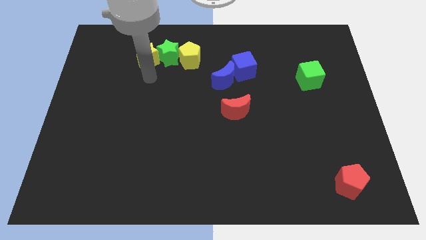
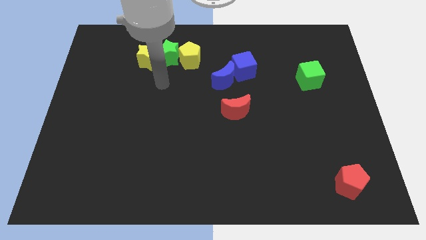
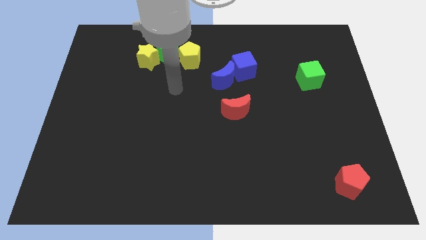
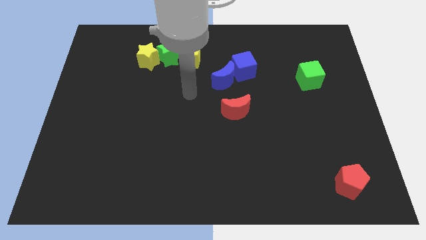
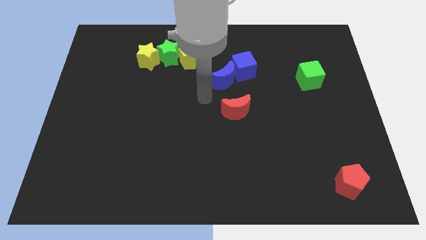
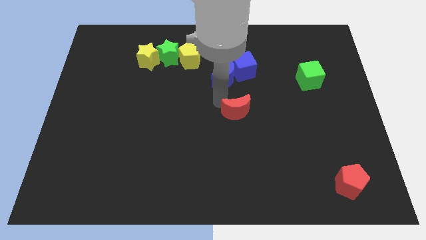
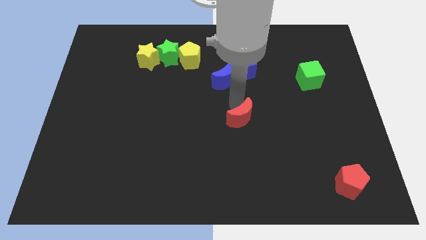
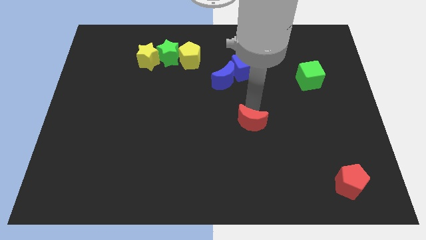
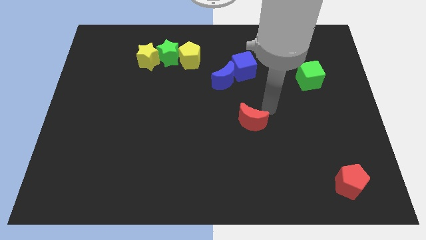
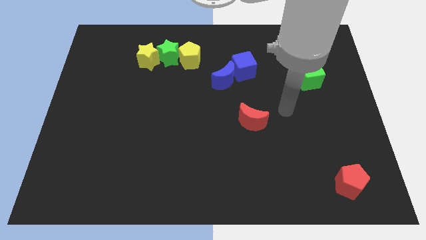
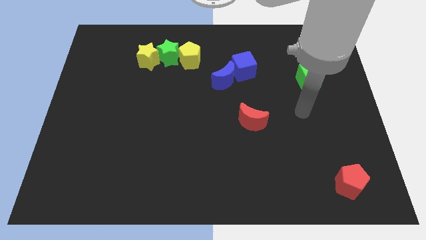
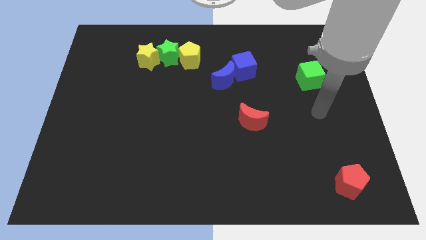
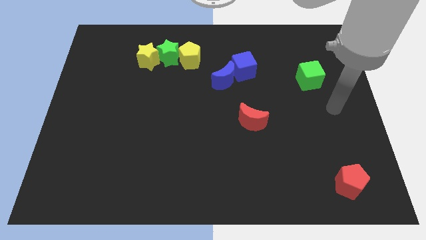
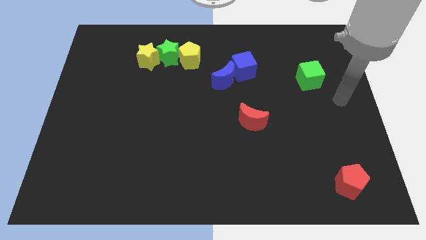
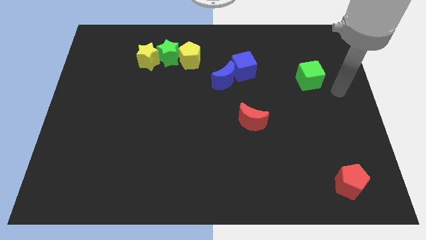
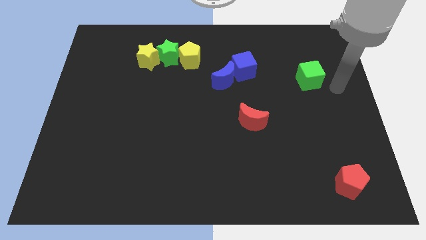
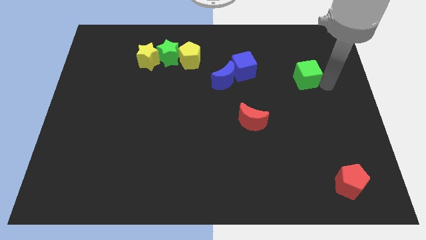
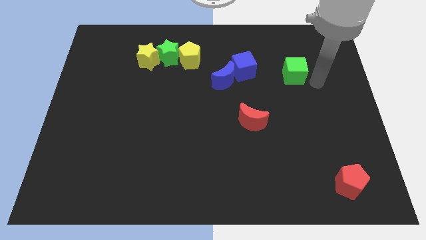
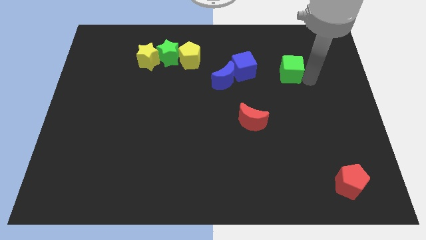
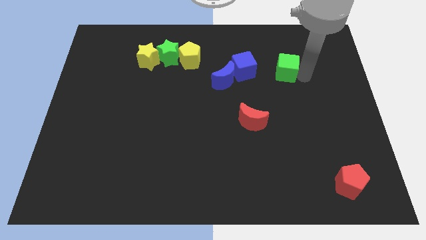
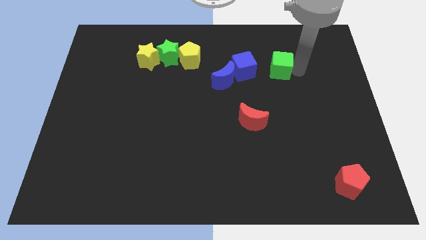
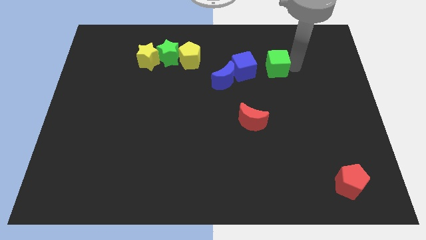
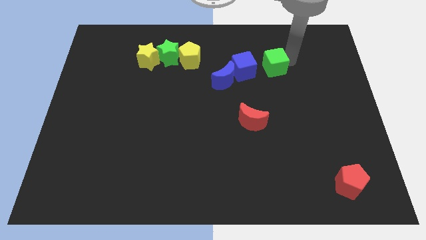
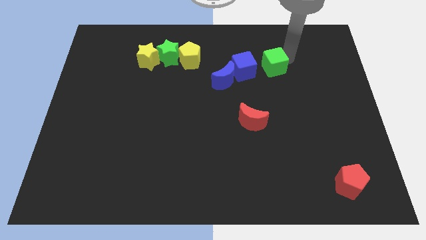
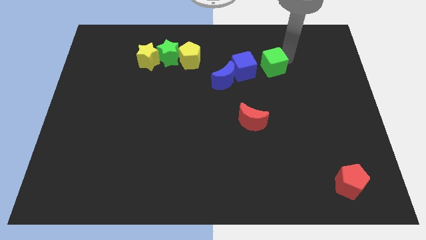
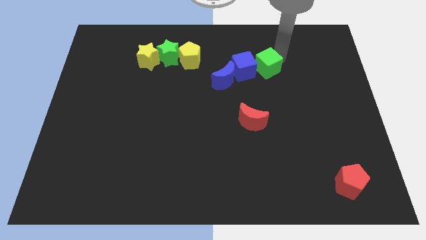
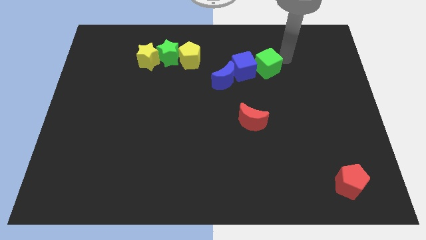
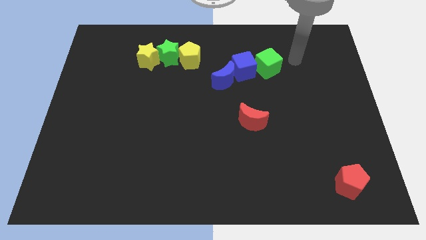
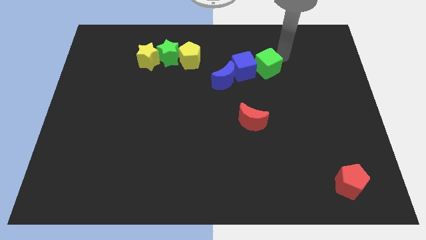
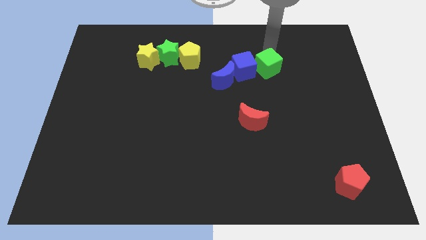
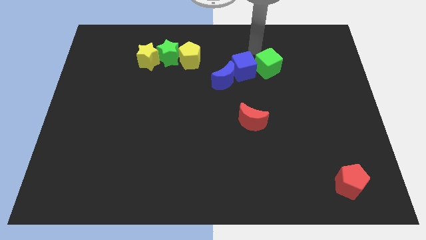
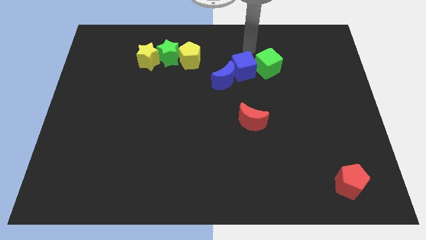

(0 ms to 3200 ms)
place the green cube to the right of the blue cube

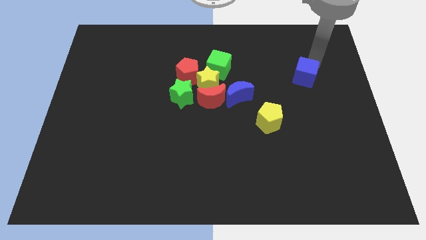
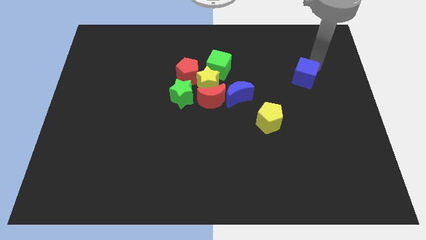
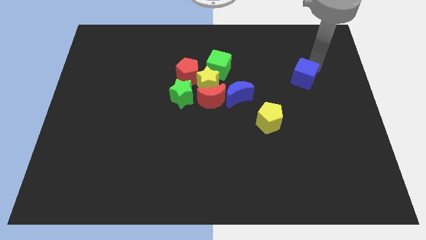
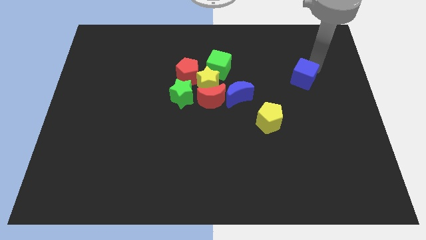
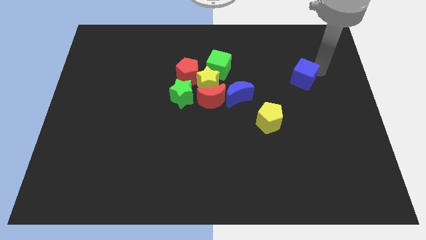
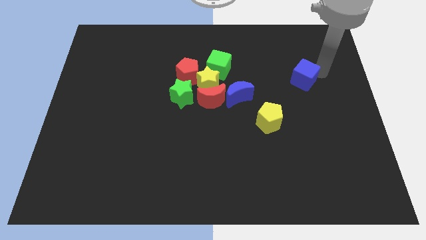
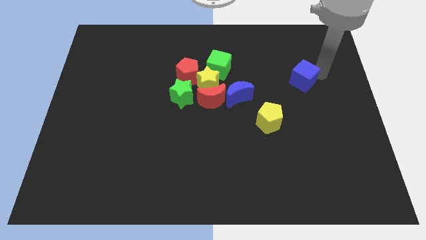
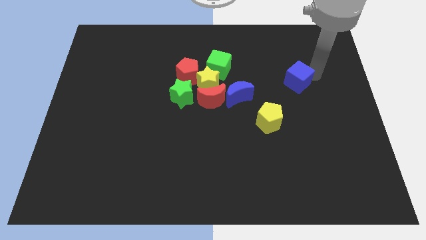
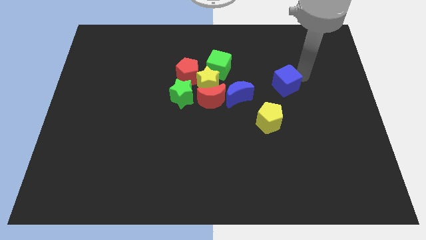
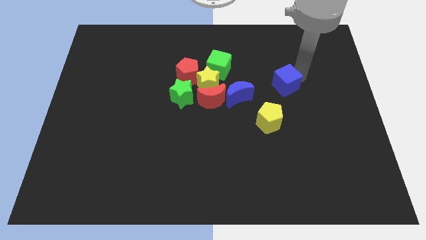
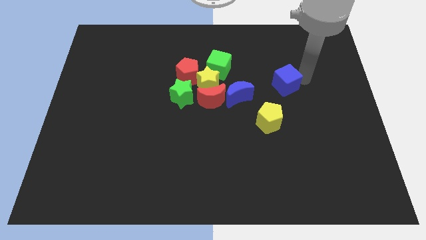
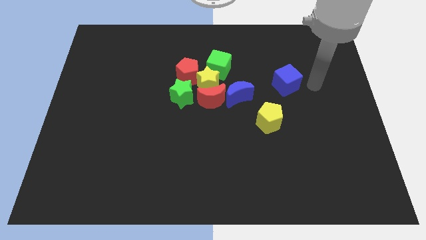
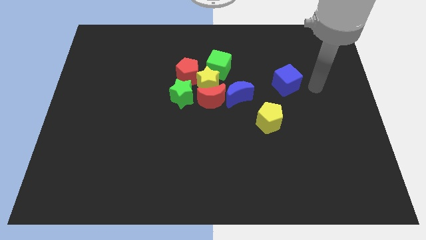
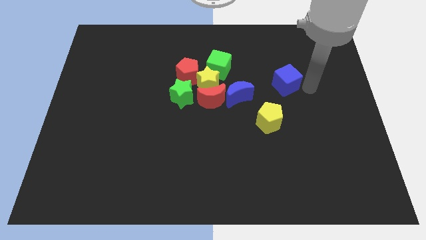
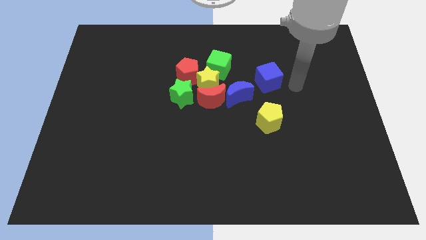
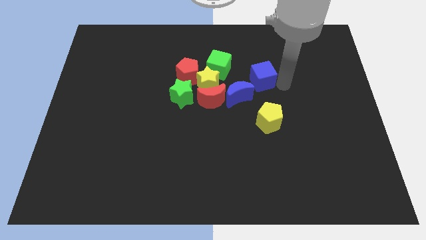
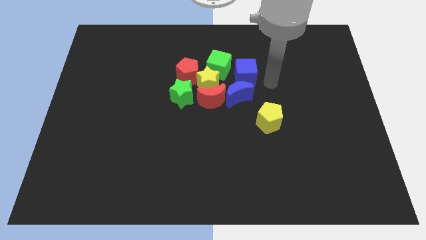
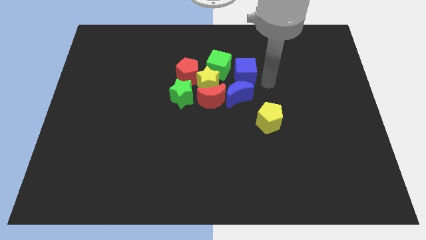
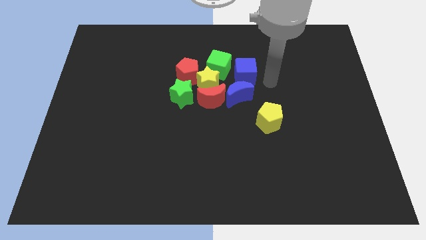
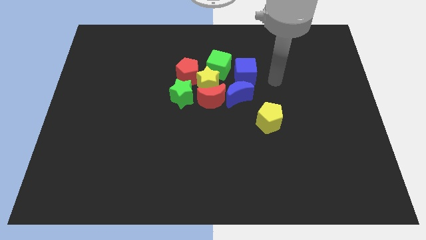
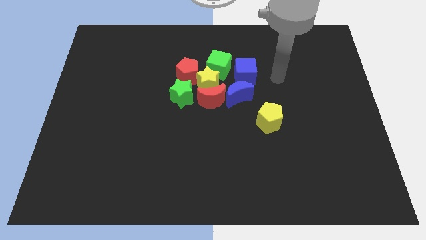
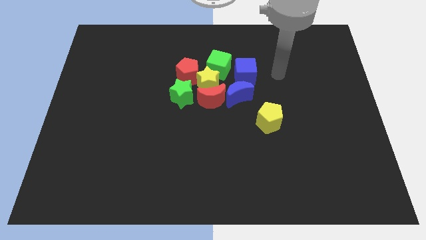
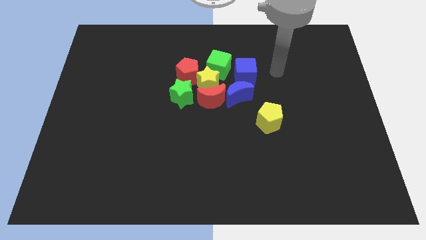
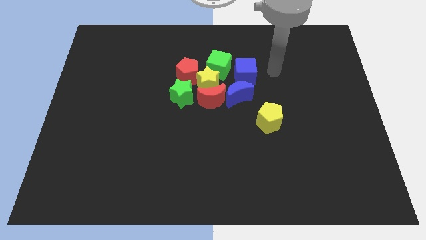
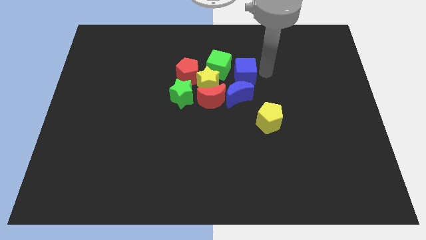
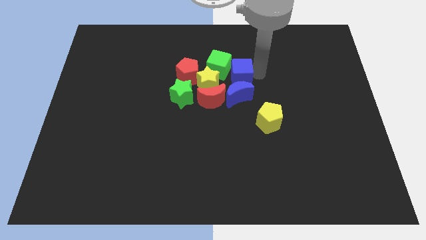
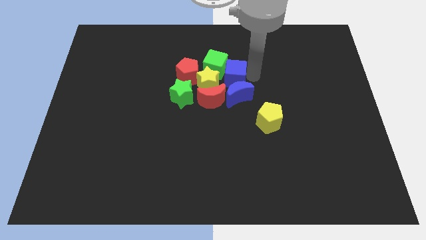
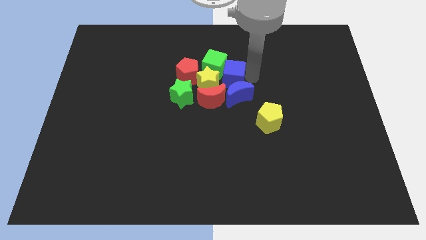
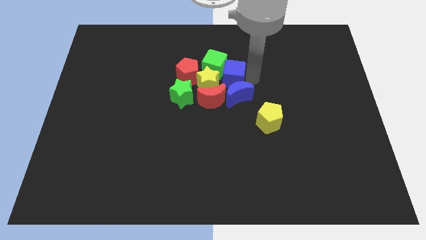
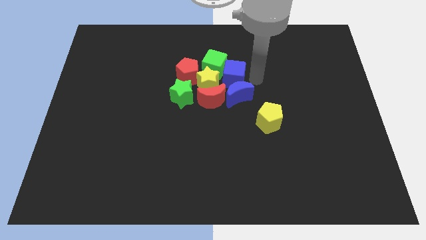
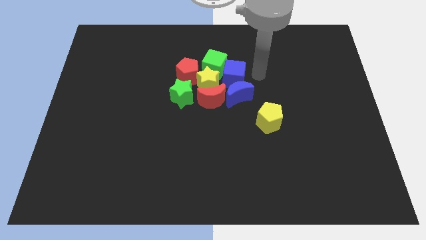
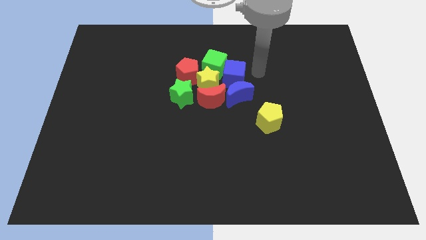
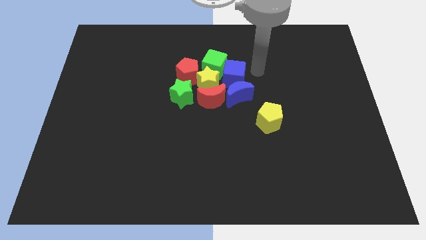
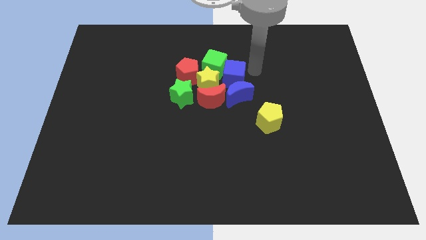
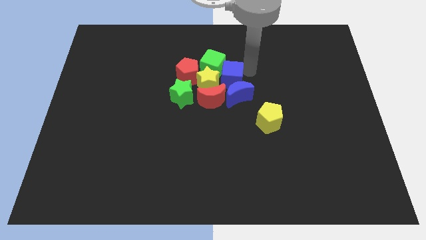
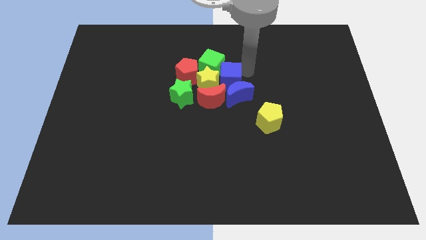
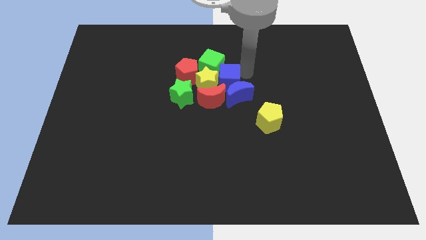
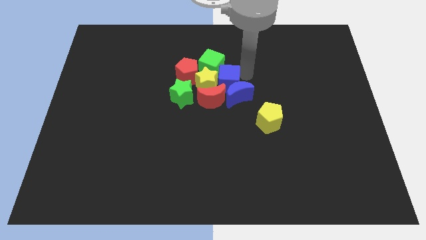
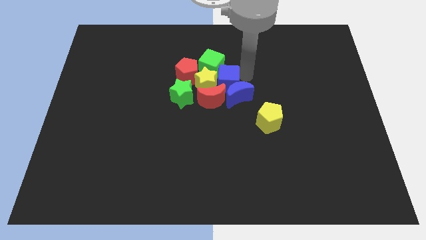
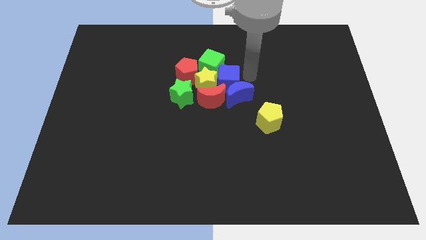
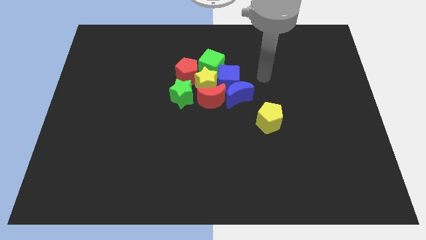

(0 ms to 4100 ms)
slide blue cube to right of yellow star

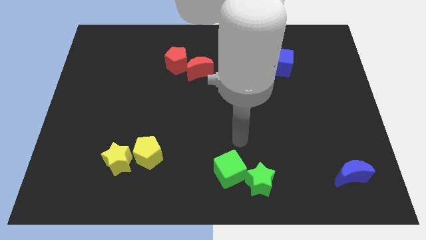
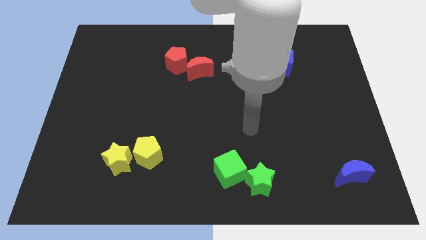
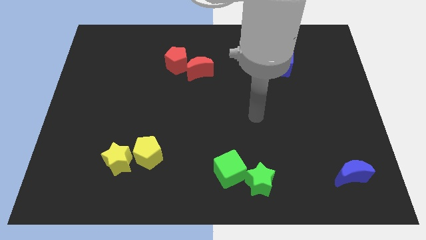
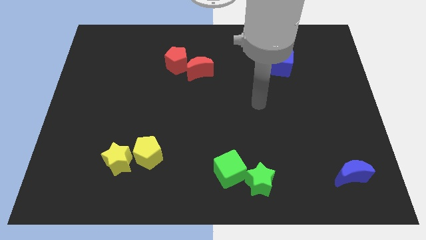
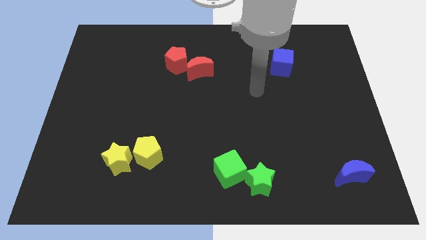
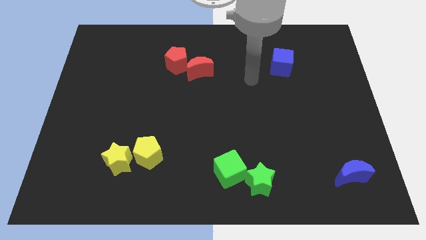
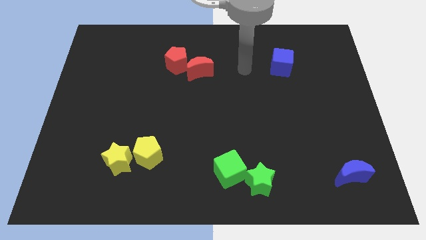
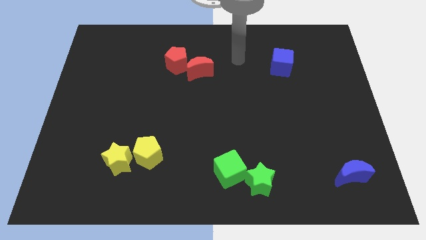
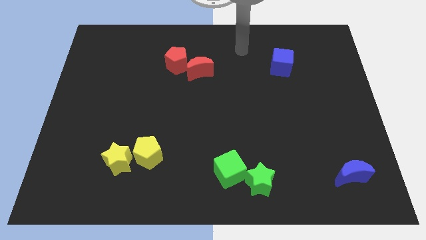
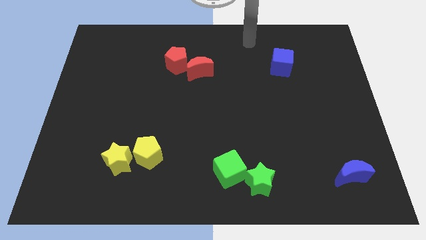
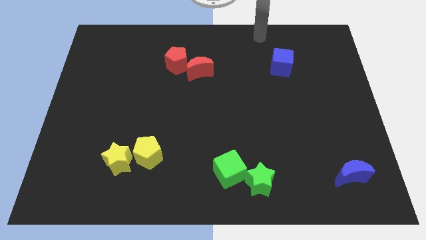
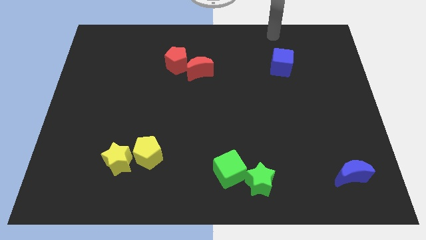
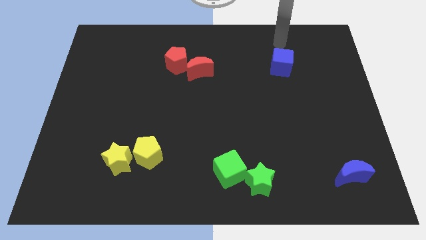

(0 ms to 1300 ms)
move the arm towards the top right

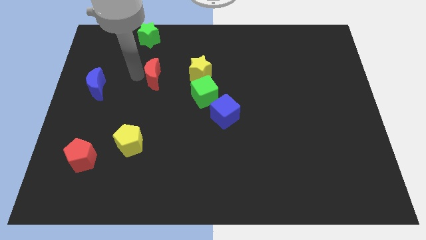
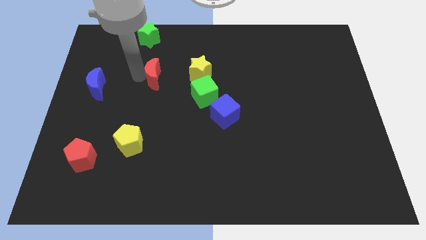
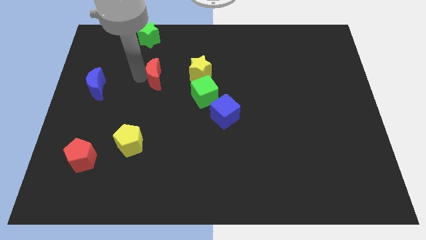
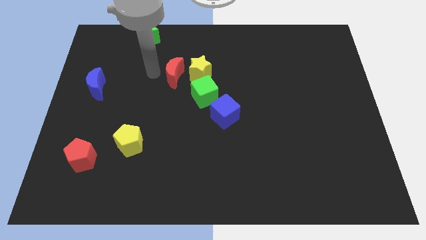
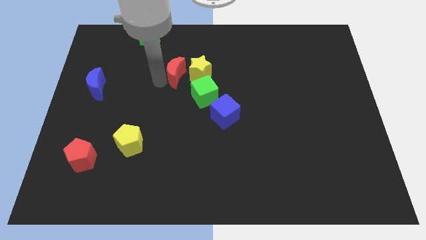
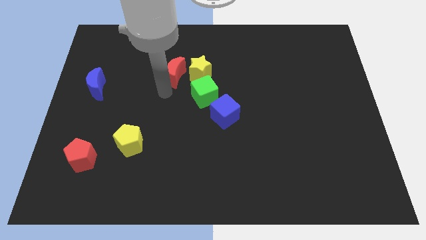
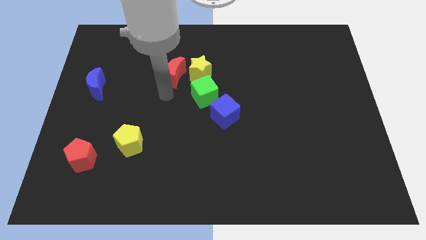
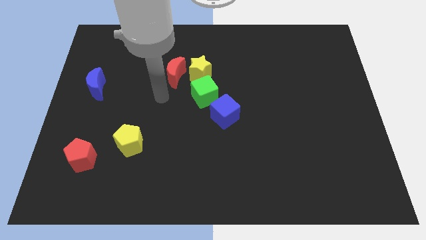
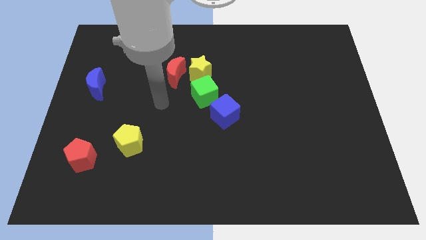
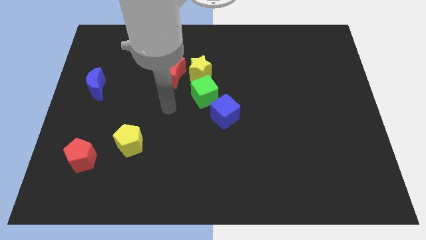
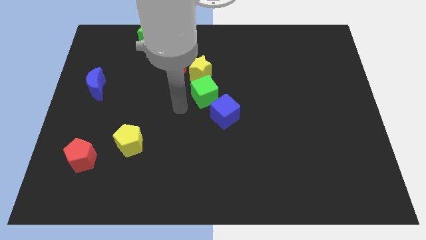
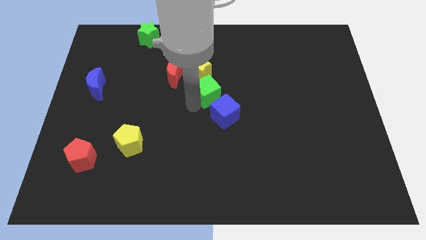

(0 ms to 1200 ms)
move the red crescent close to the yellow star
